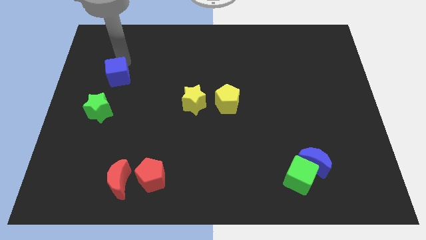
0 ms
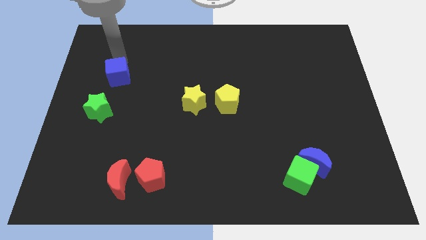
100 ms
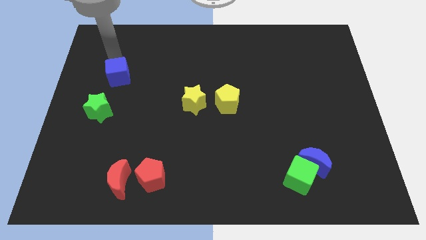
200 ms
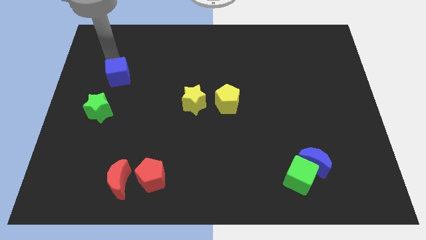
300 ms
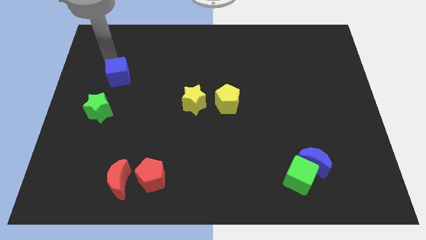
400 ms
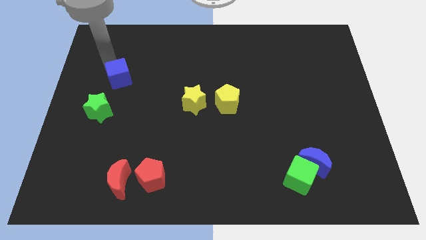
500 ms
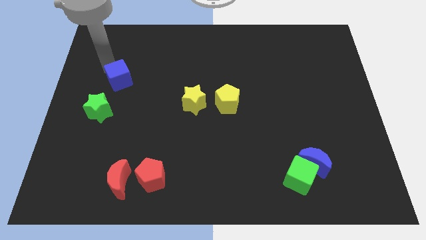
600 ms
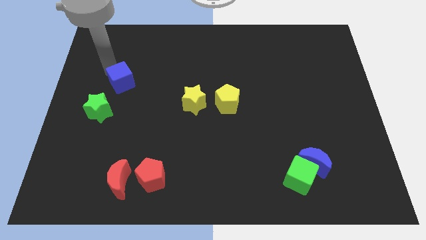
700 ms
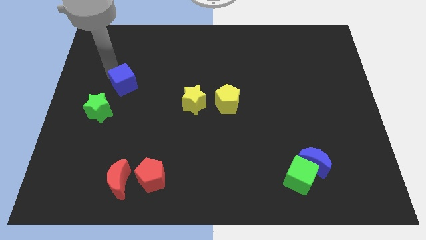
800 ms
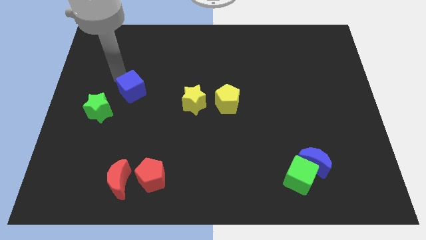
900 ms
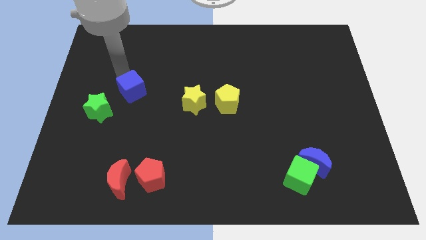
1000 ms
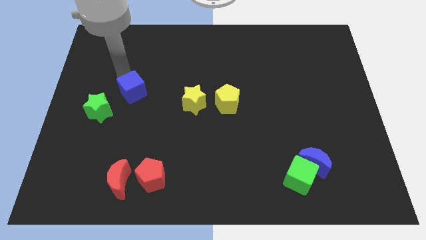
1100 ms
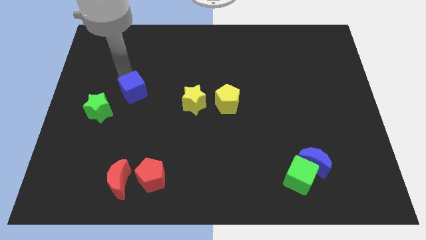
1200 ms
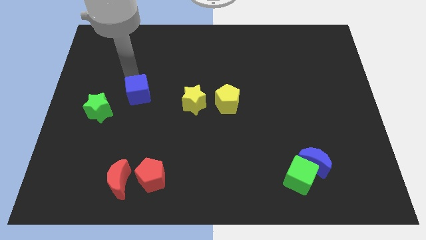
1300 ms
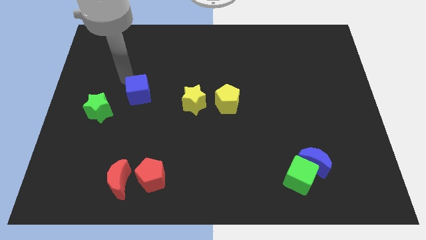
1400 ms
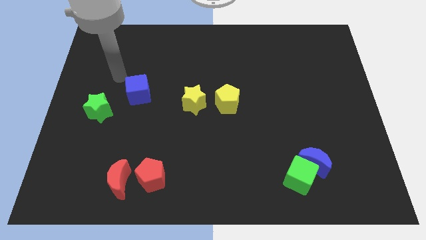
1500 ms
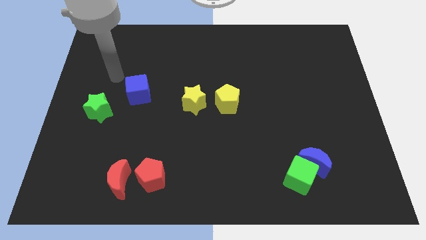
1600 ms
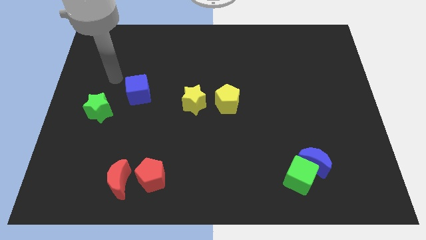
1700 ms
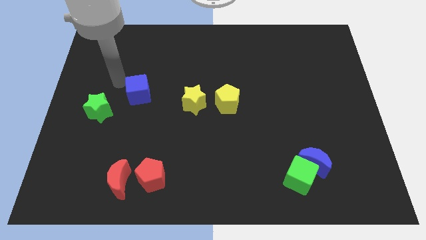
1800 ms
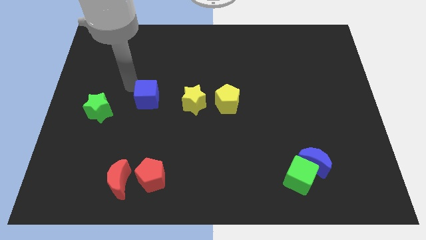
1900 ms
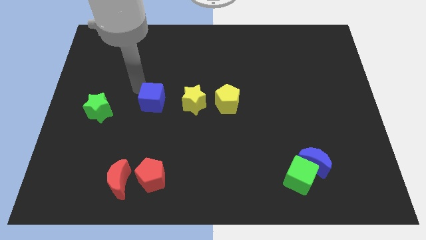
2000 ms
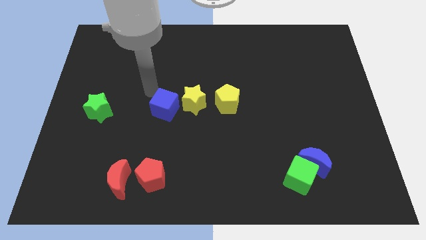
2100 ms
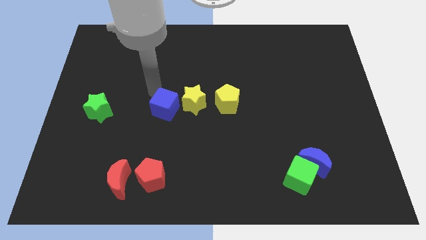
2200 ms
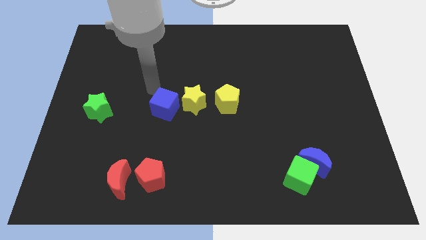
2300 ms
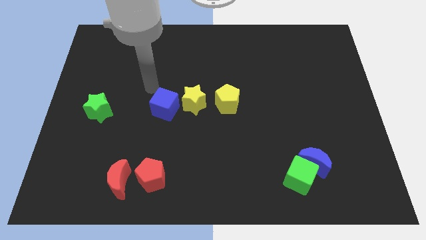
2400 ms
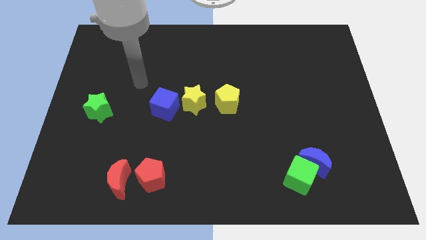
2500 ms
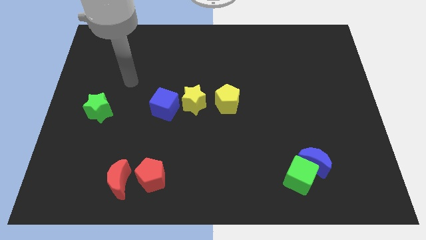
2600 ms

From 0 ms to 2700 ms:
place the blue cube left to the yellow star

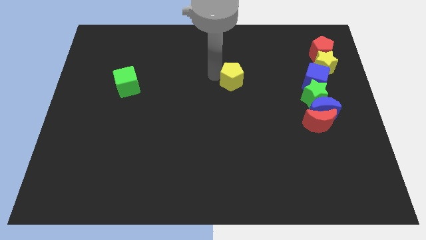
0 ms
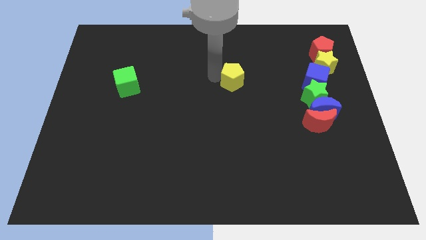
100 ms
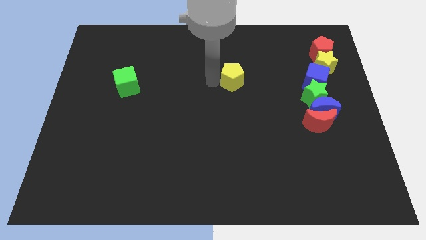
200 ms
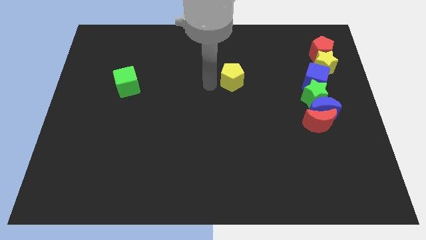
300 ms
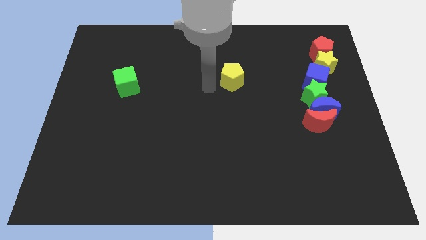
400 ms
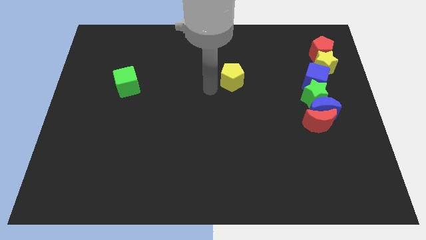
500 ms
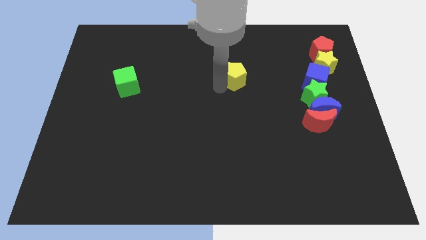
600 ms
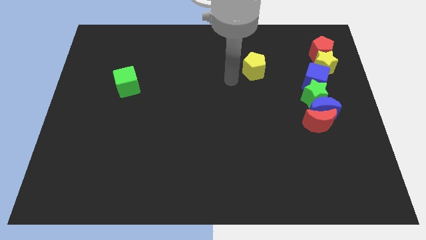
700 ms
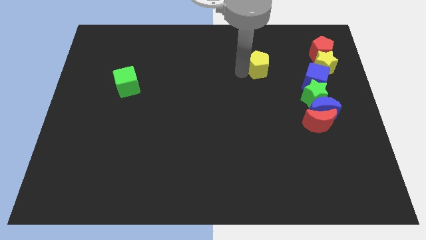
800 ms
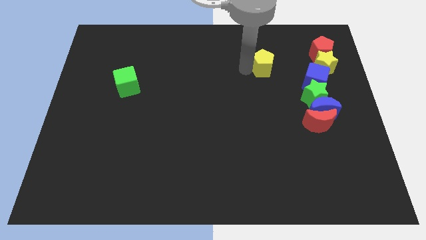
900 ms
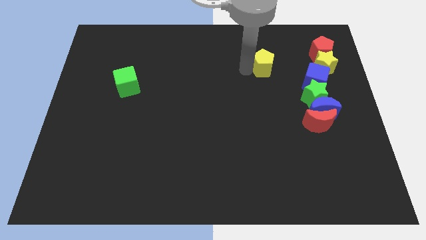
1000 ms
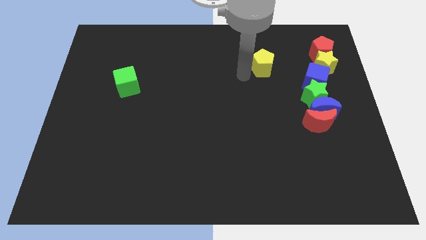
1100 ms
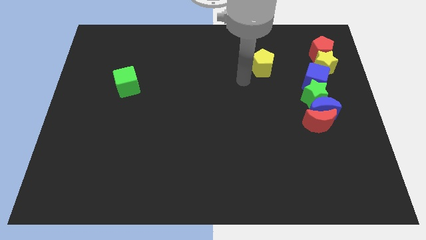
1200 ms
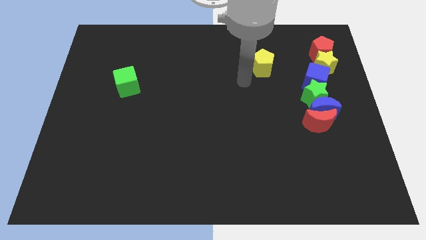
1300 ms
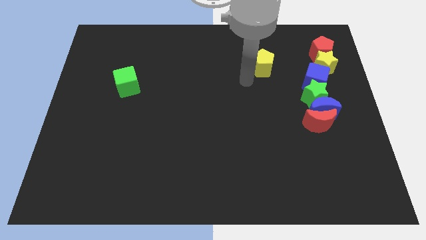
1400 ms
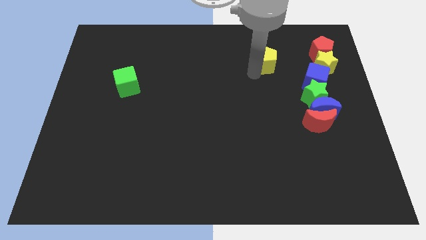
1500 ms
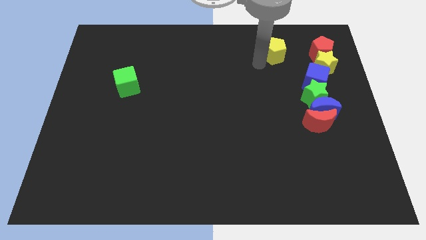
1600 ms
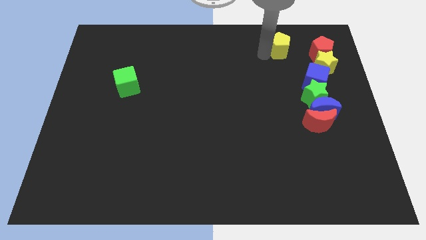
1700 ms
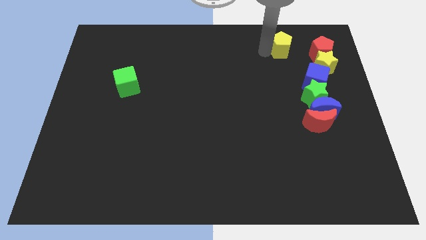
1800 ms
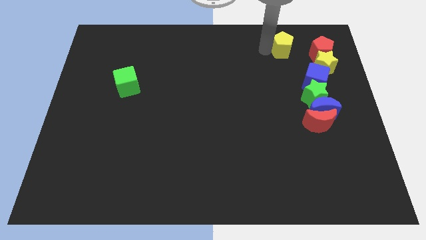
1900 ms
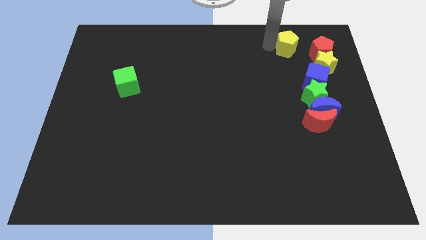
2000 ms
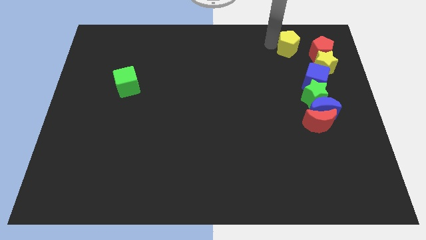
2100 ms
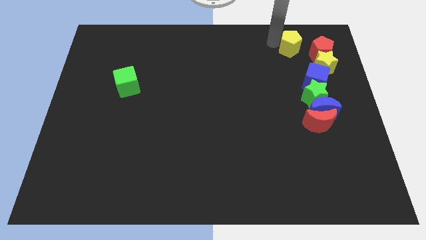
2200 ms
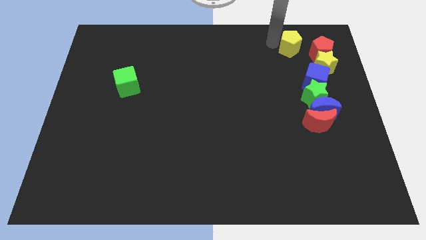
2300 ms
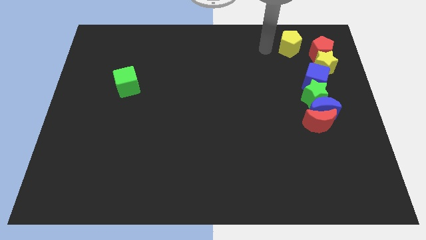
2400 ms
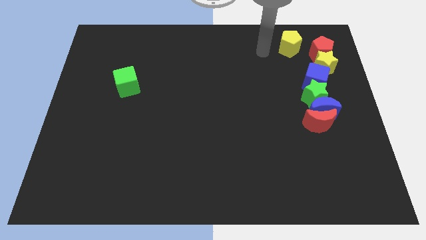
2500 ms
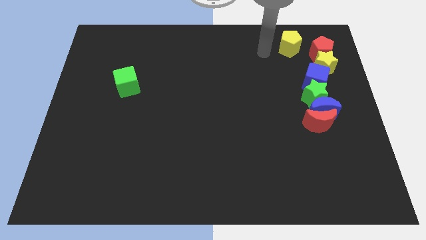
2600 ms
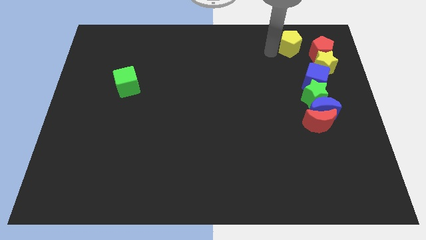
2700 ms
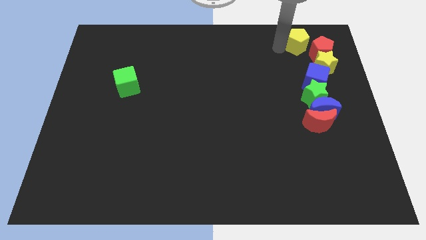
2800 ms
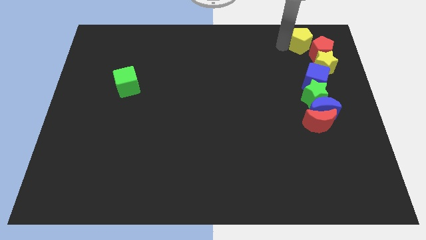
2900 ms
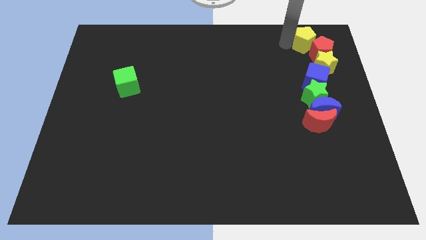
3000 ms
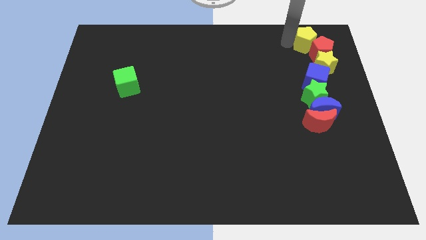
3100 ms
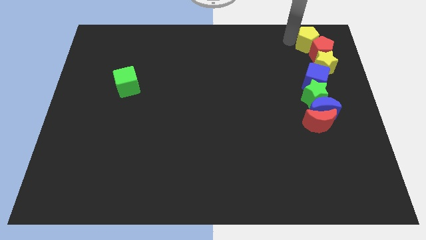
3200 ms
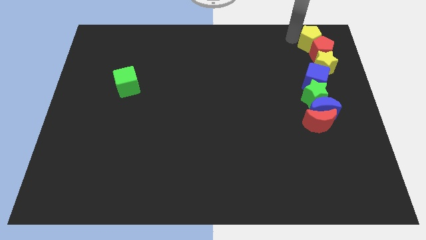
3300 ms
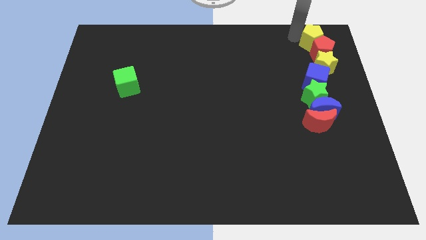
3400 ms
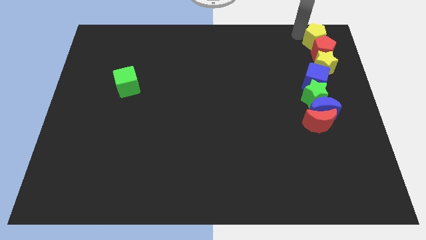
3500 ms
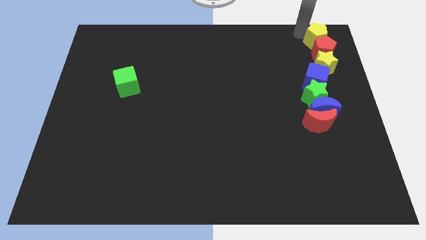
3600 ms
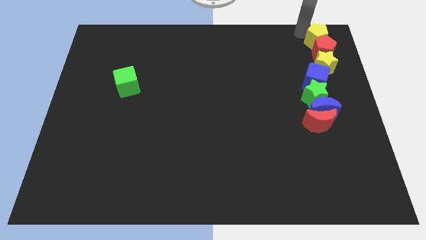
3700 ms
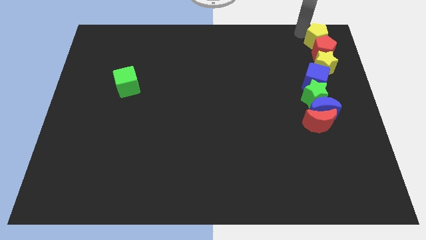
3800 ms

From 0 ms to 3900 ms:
place the yellow pentagon on top of the red pentagon

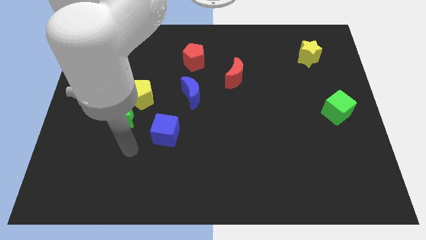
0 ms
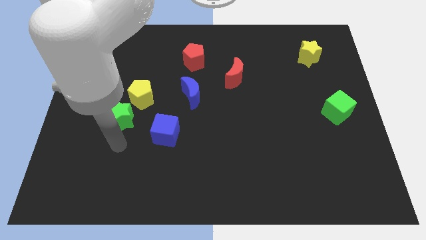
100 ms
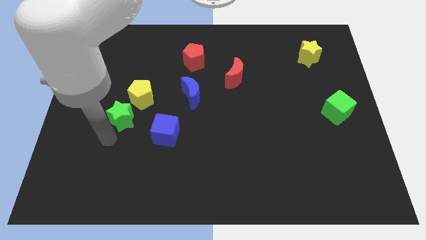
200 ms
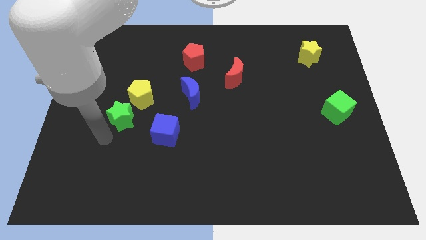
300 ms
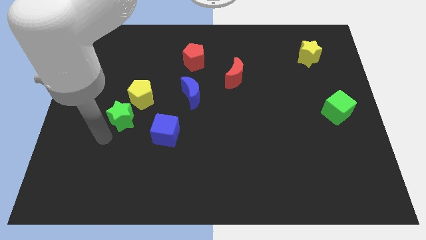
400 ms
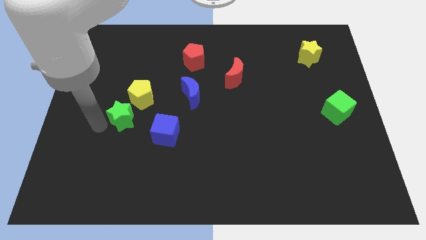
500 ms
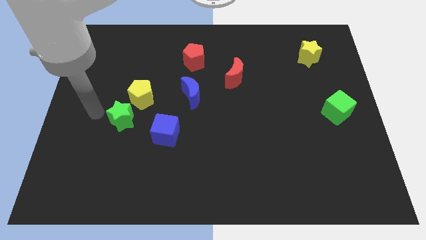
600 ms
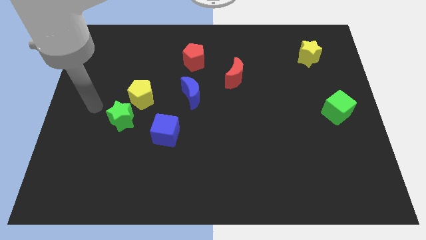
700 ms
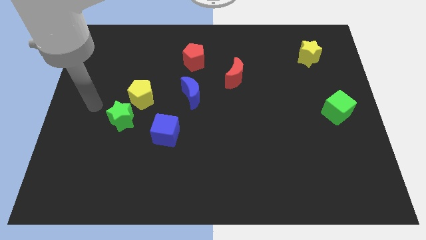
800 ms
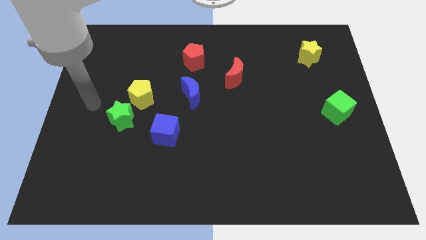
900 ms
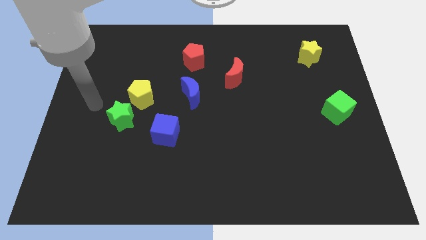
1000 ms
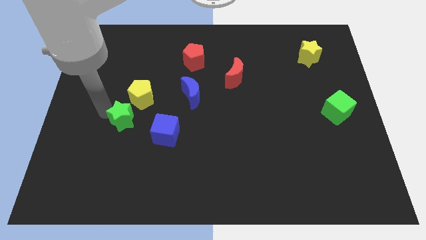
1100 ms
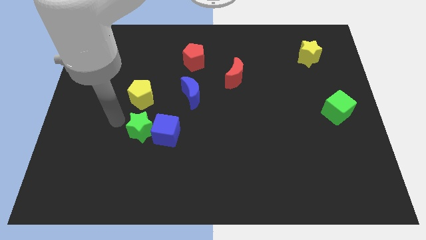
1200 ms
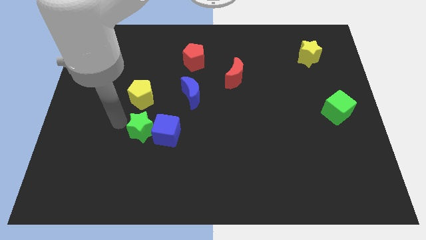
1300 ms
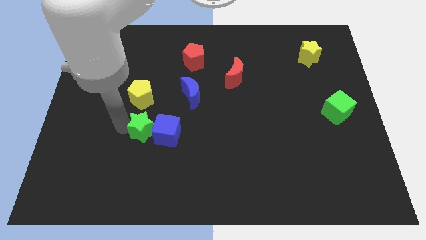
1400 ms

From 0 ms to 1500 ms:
push the green star into blue cube

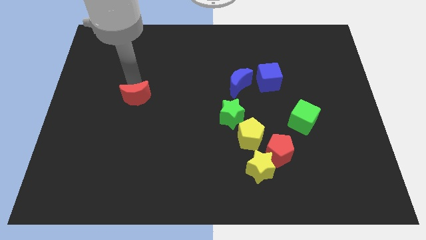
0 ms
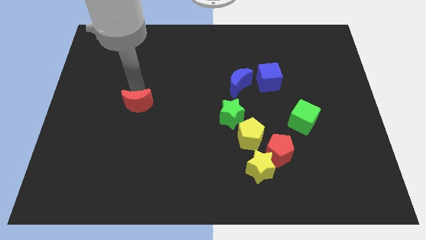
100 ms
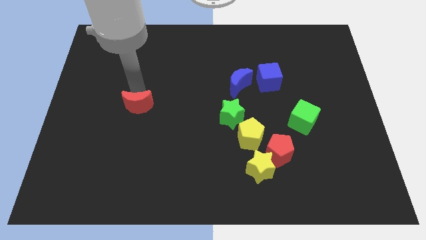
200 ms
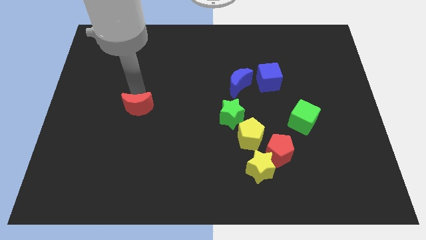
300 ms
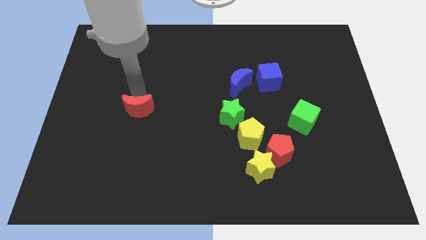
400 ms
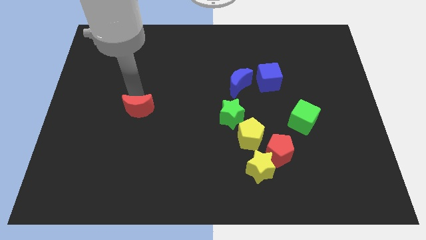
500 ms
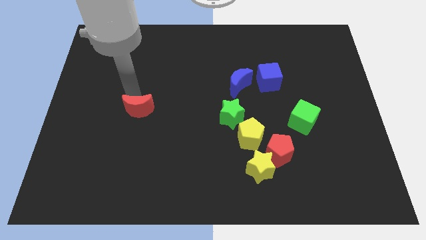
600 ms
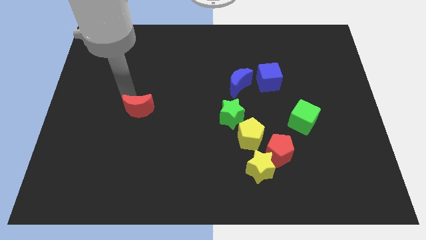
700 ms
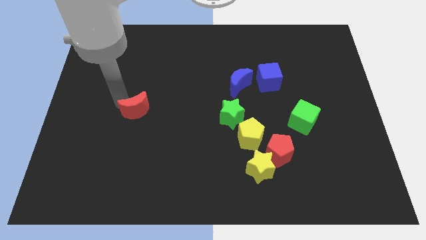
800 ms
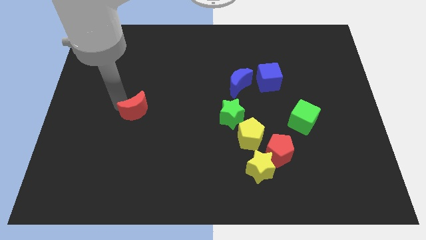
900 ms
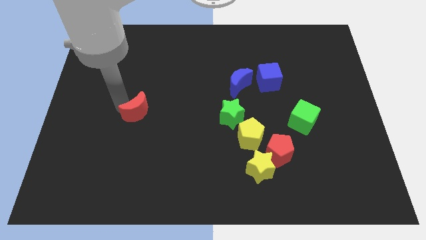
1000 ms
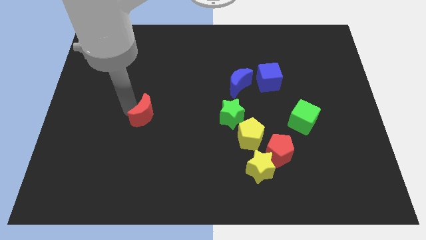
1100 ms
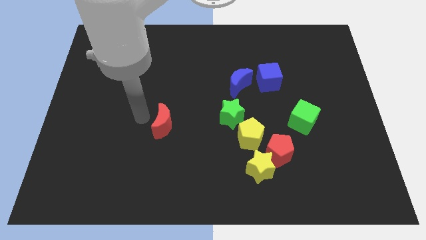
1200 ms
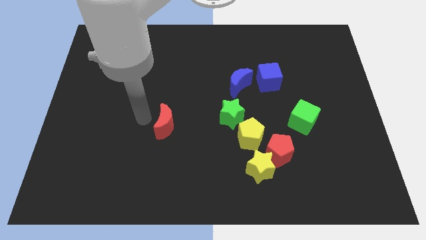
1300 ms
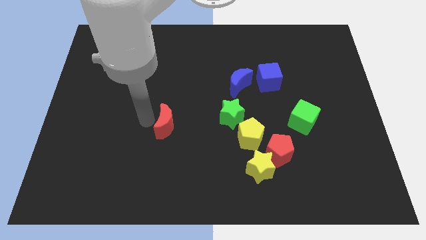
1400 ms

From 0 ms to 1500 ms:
place the red moon diagonally bottom left to green star
